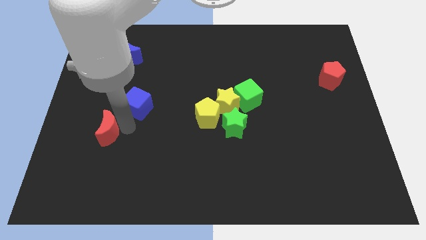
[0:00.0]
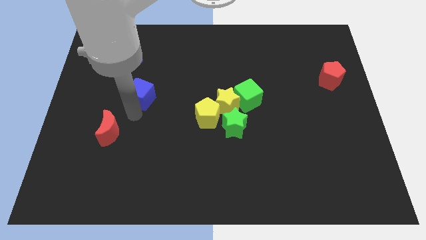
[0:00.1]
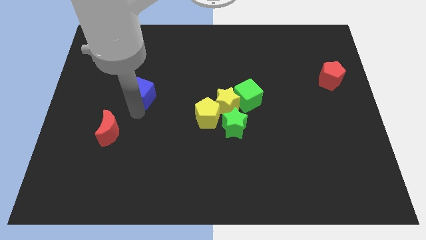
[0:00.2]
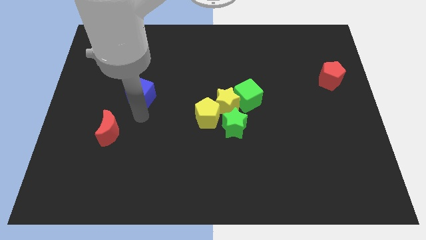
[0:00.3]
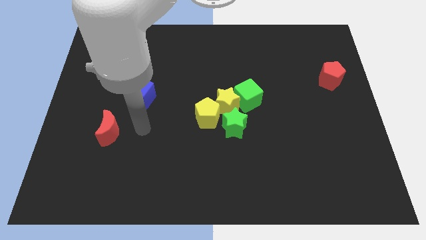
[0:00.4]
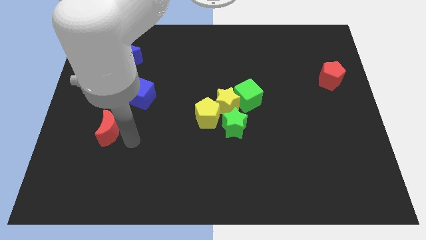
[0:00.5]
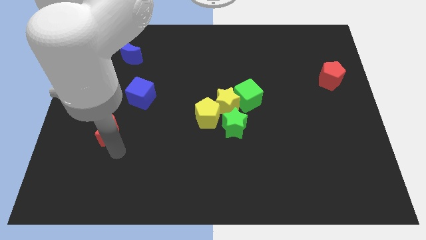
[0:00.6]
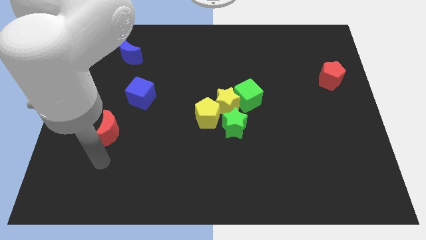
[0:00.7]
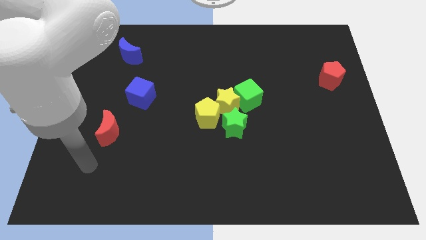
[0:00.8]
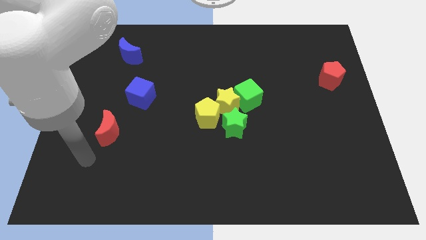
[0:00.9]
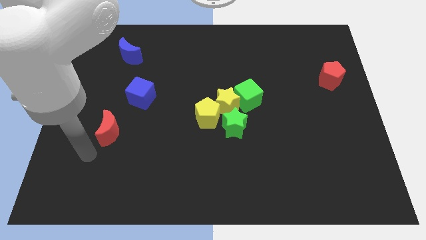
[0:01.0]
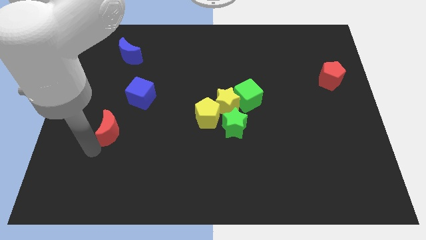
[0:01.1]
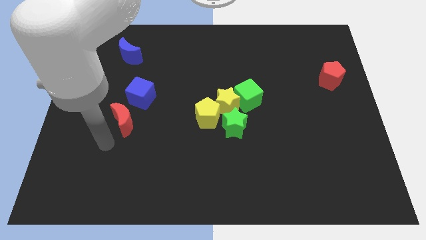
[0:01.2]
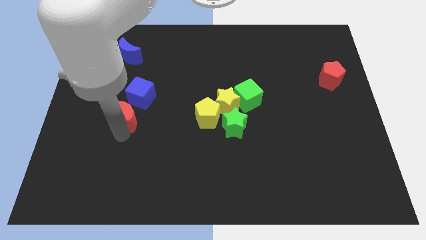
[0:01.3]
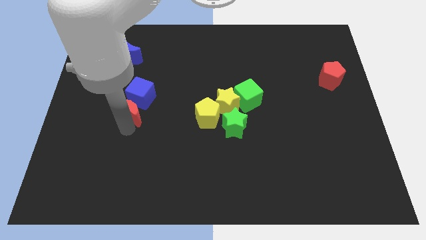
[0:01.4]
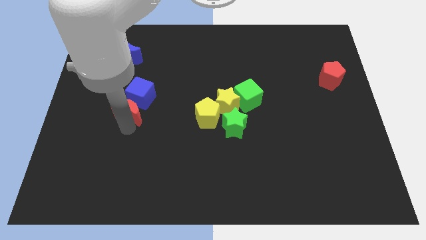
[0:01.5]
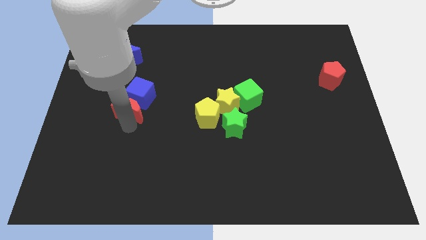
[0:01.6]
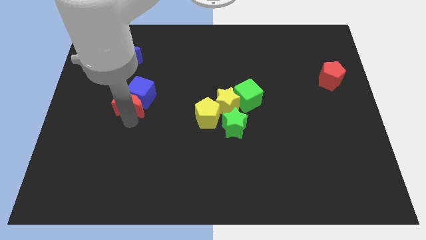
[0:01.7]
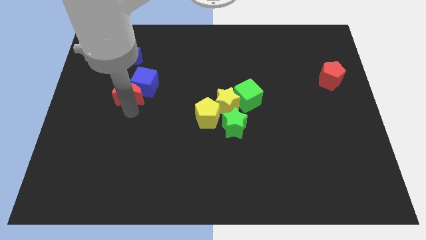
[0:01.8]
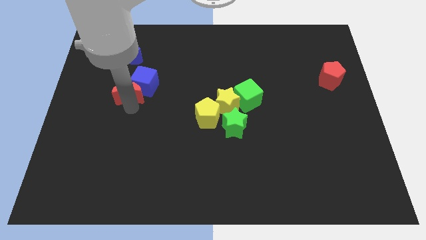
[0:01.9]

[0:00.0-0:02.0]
push the red moon into the blue cube

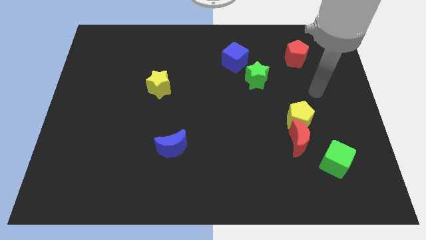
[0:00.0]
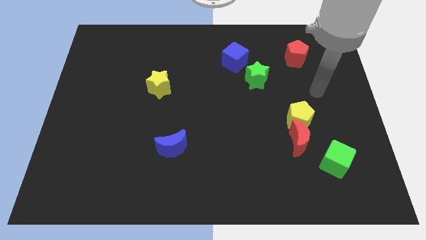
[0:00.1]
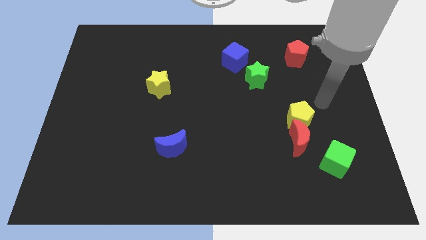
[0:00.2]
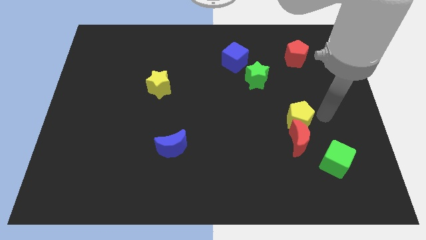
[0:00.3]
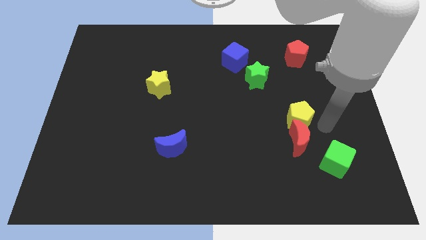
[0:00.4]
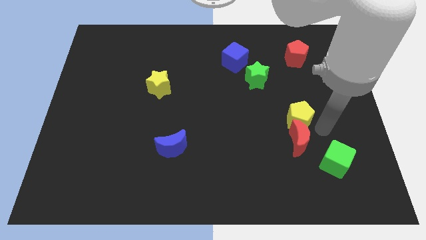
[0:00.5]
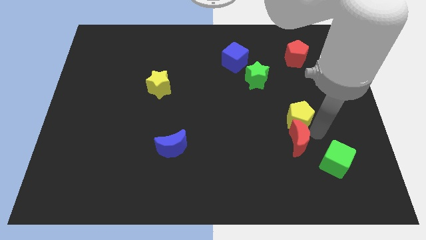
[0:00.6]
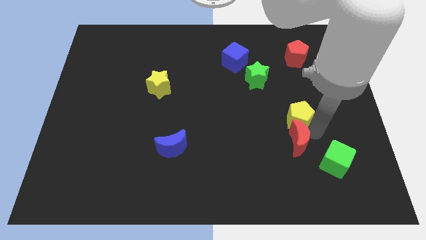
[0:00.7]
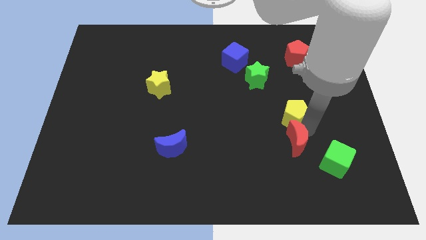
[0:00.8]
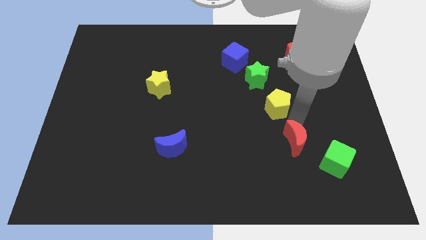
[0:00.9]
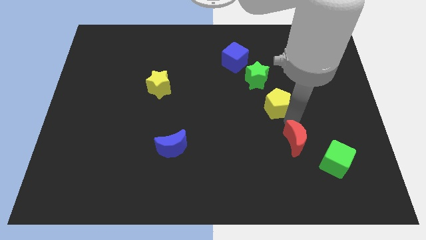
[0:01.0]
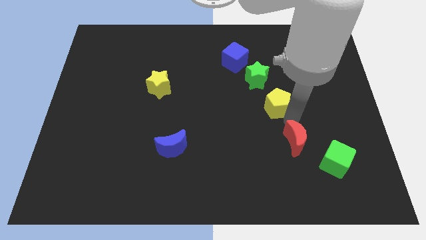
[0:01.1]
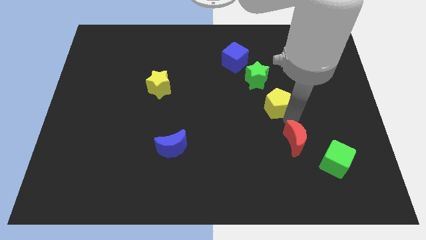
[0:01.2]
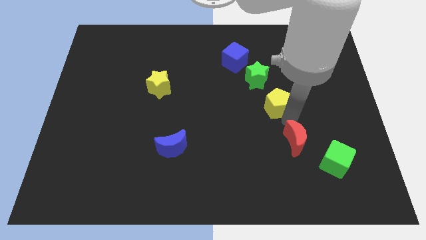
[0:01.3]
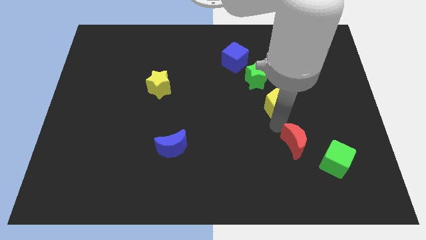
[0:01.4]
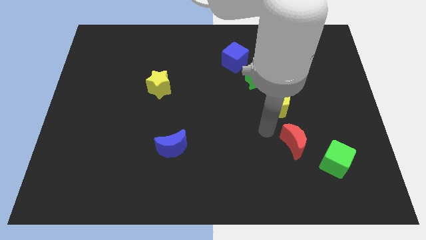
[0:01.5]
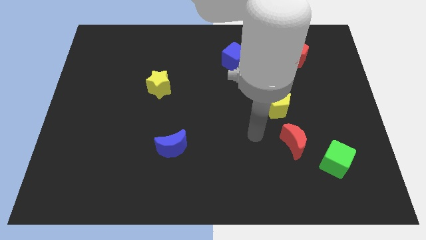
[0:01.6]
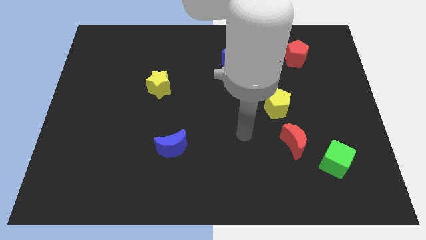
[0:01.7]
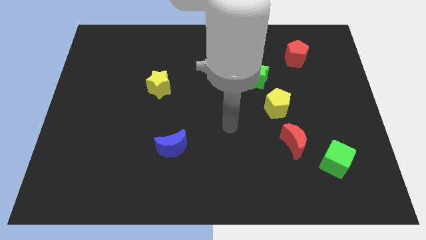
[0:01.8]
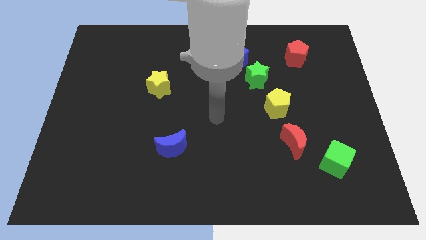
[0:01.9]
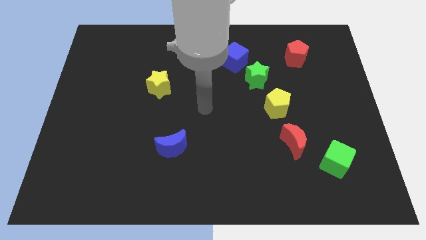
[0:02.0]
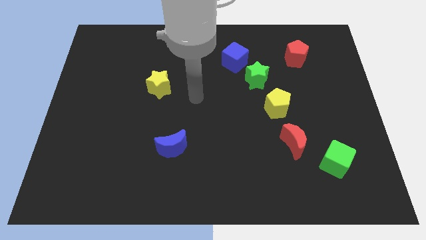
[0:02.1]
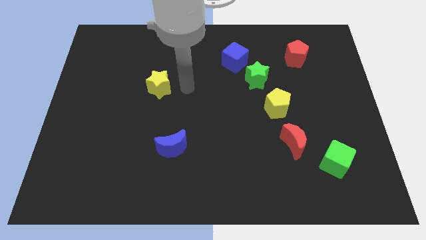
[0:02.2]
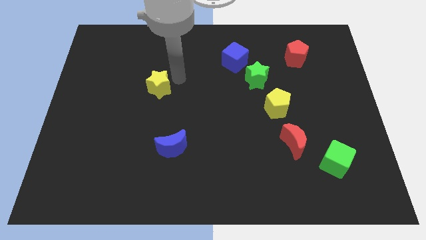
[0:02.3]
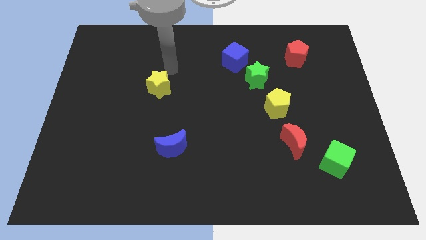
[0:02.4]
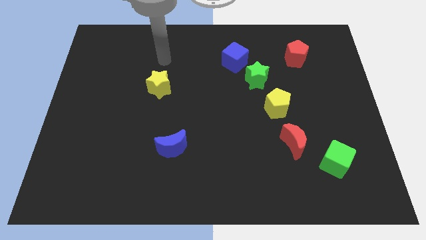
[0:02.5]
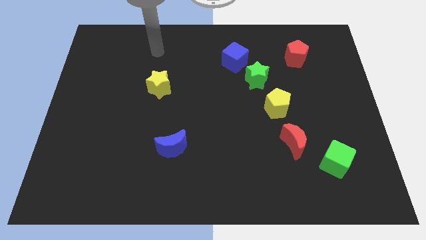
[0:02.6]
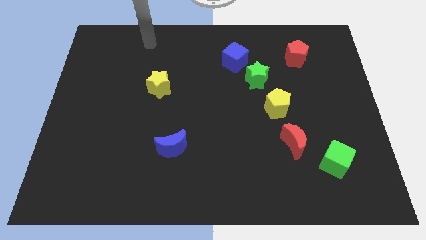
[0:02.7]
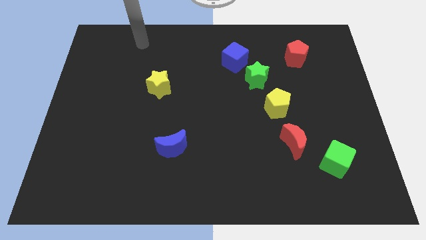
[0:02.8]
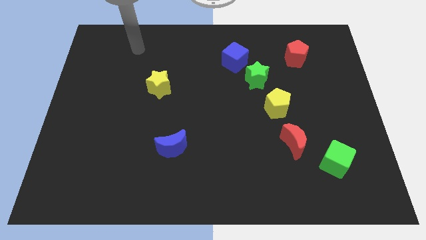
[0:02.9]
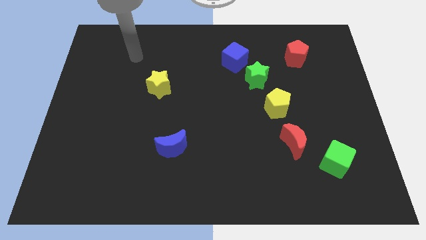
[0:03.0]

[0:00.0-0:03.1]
slightly push the yellow pentagon and red moon in opposite directions

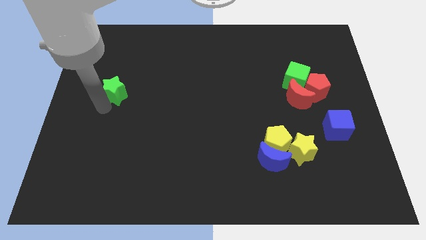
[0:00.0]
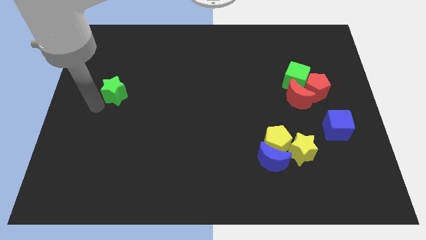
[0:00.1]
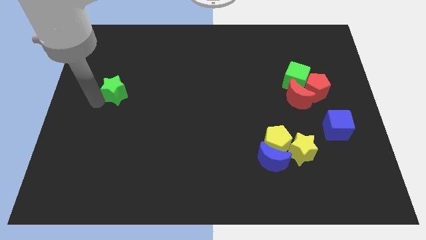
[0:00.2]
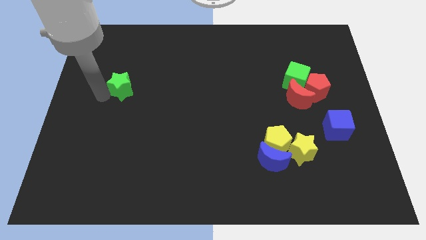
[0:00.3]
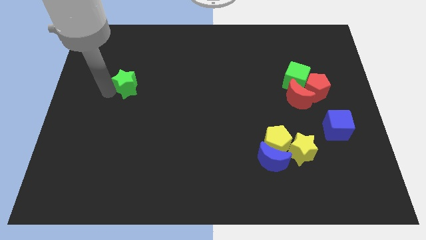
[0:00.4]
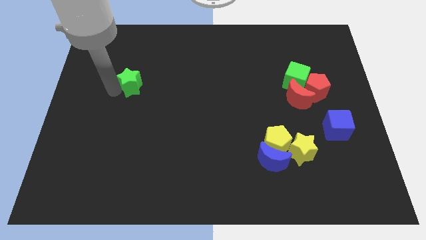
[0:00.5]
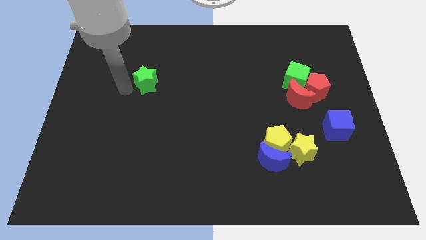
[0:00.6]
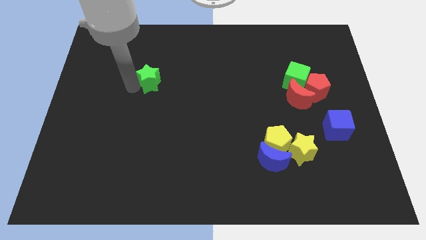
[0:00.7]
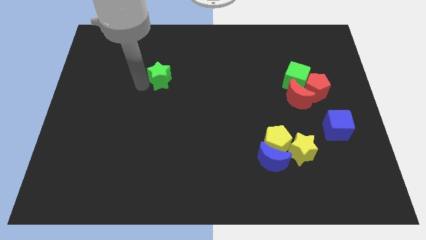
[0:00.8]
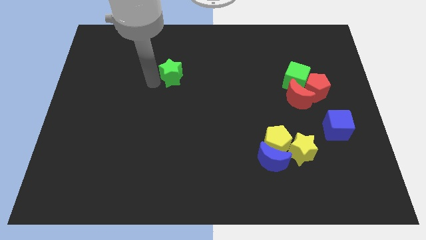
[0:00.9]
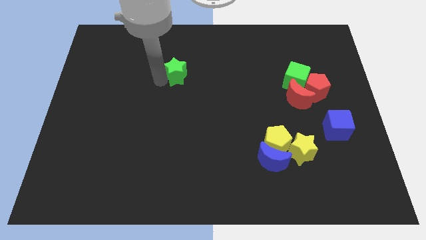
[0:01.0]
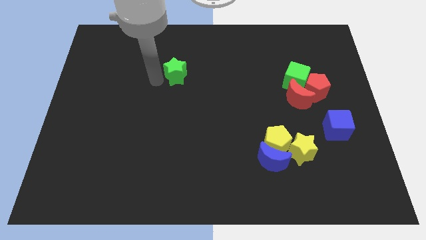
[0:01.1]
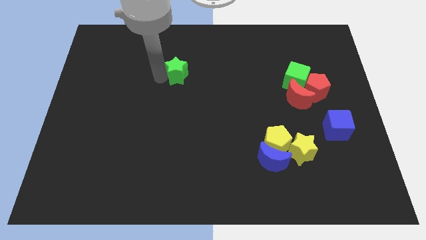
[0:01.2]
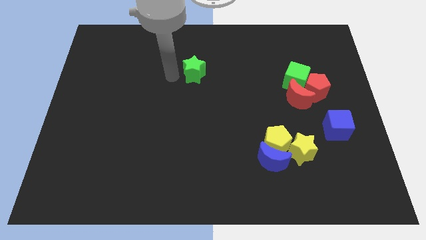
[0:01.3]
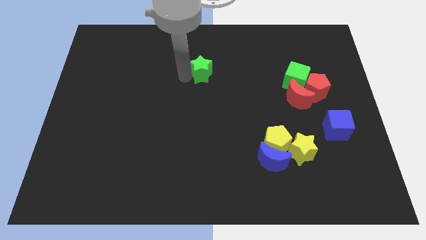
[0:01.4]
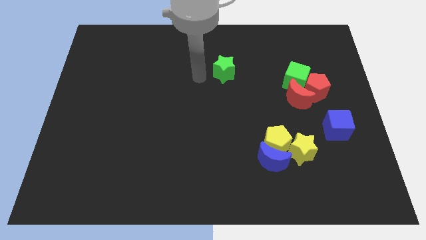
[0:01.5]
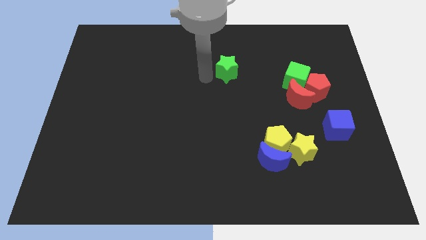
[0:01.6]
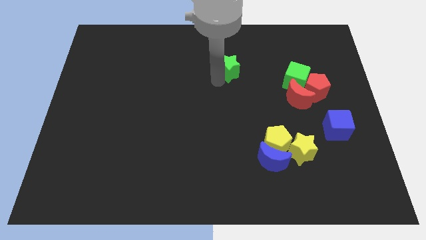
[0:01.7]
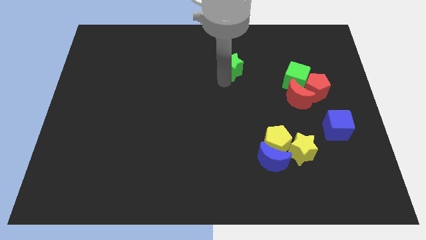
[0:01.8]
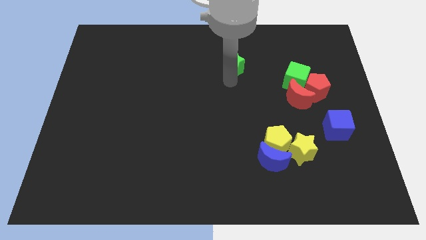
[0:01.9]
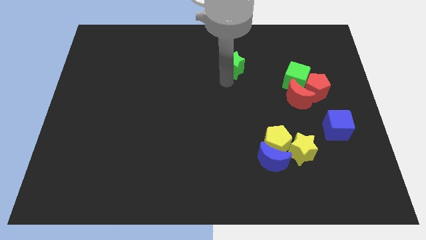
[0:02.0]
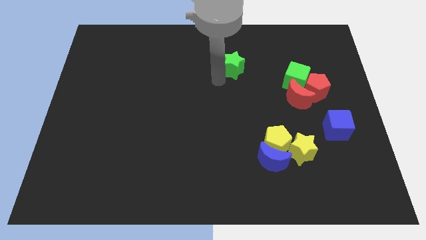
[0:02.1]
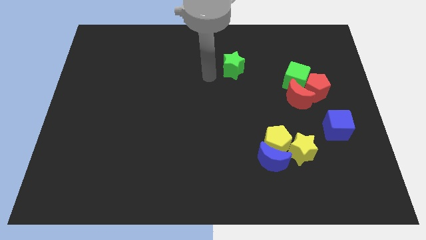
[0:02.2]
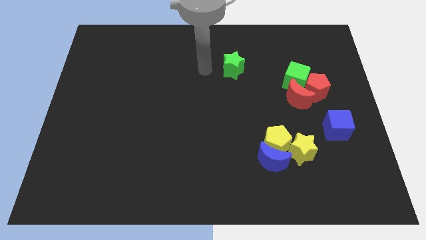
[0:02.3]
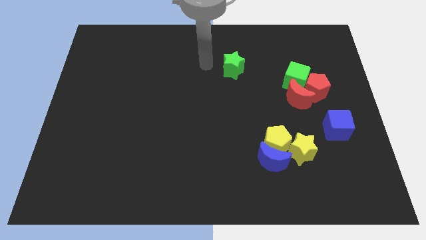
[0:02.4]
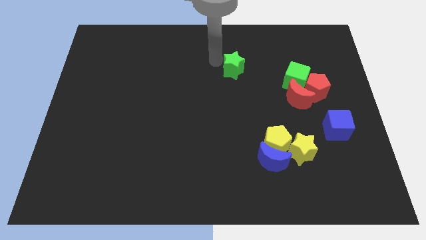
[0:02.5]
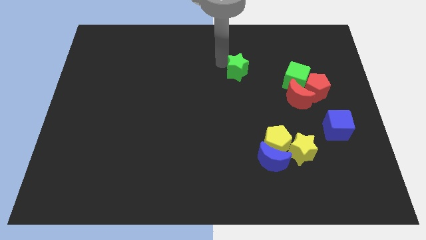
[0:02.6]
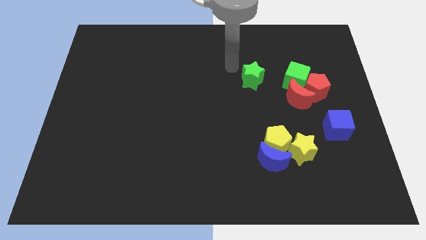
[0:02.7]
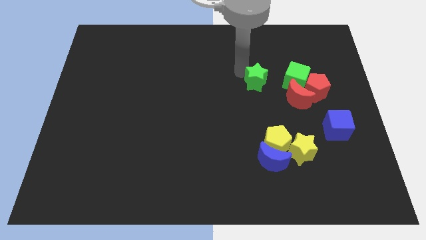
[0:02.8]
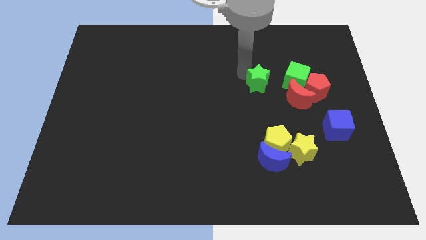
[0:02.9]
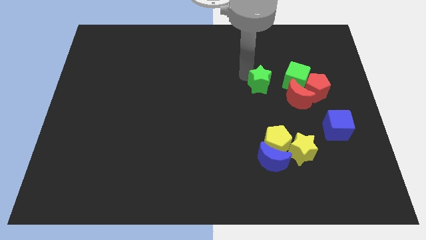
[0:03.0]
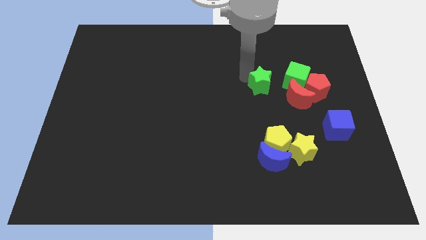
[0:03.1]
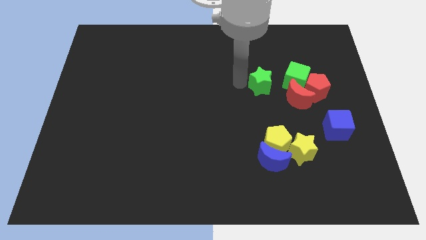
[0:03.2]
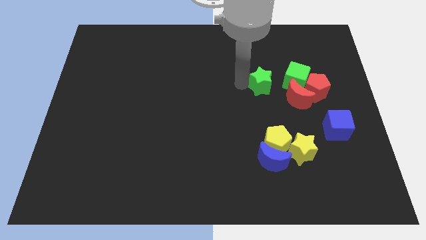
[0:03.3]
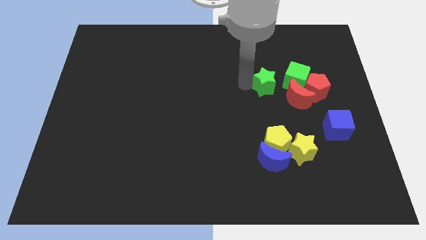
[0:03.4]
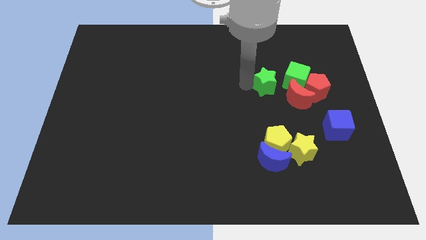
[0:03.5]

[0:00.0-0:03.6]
move the green star to the left of the green cube
